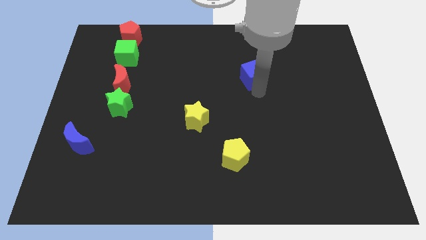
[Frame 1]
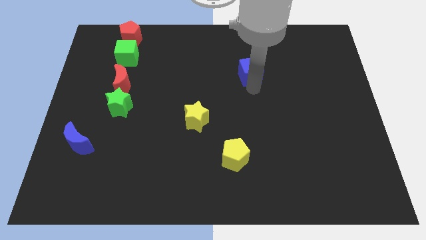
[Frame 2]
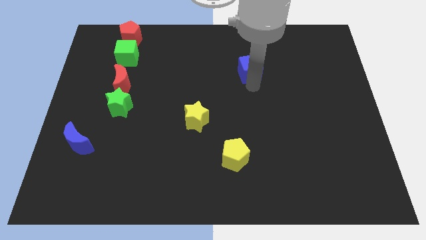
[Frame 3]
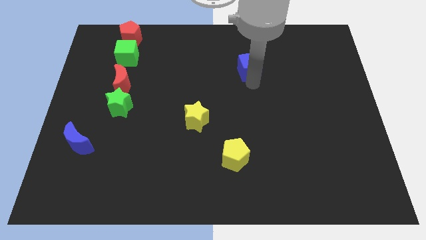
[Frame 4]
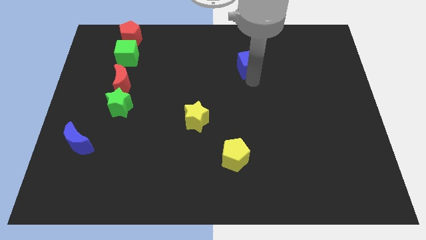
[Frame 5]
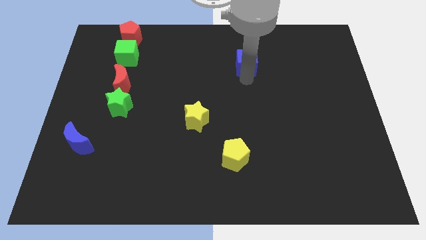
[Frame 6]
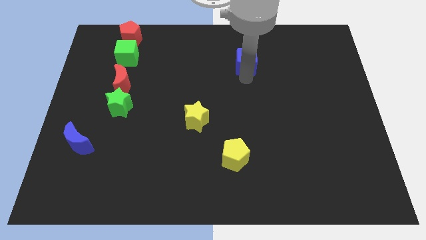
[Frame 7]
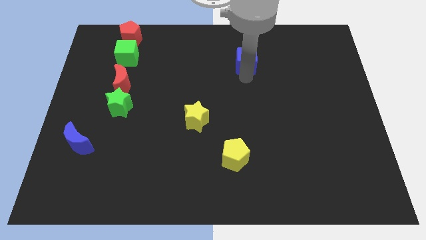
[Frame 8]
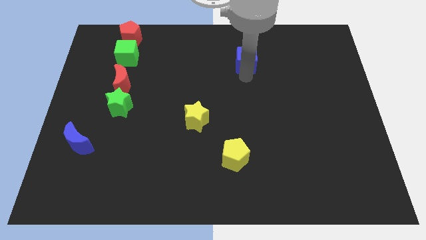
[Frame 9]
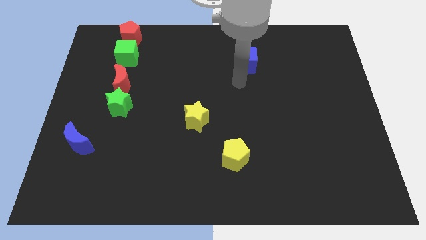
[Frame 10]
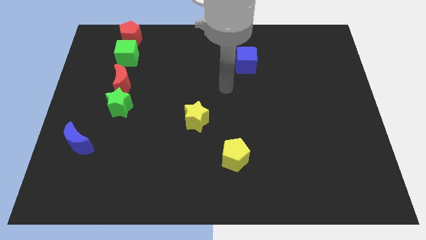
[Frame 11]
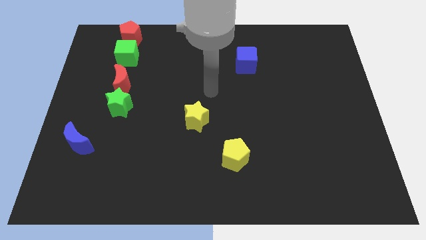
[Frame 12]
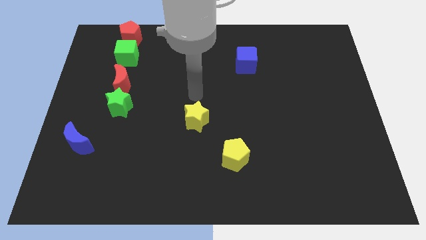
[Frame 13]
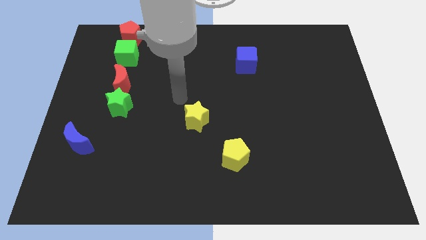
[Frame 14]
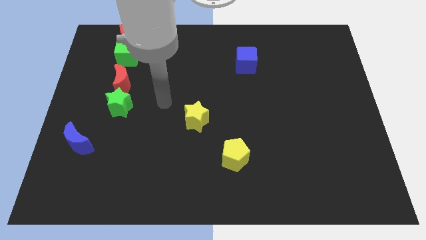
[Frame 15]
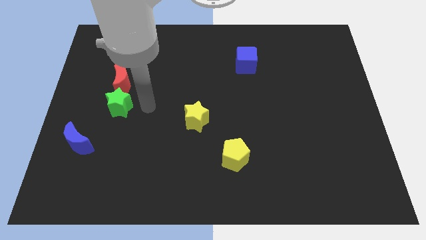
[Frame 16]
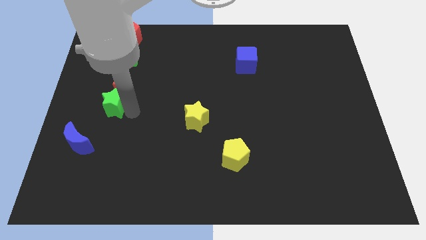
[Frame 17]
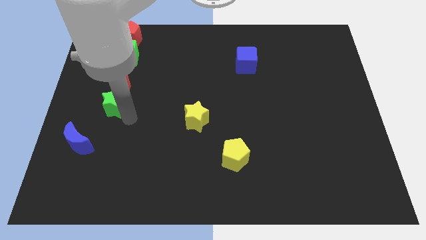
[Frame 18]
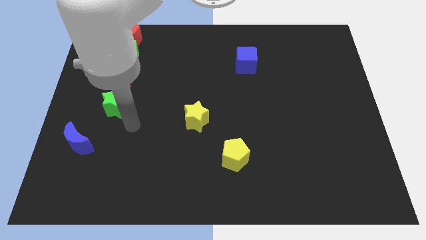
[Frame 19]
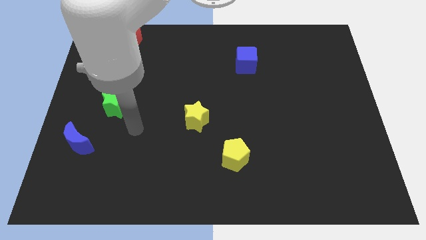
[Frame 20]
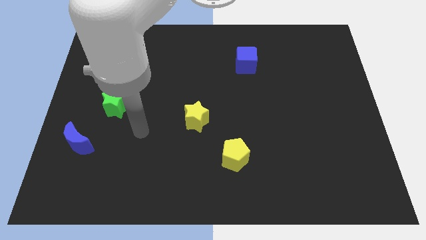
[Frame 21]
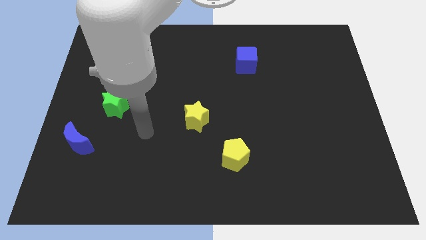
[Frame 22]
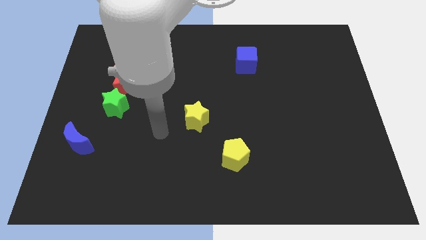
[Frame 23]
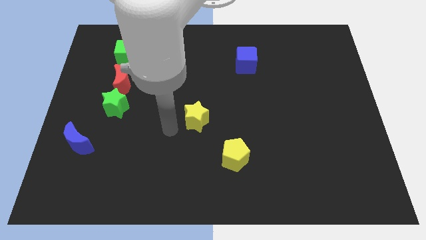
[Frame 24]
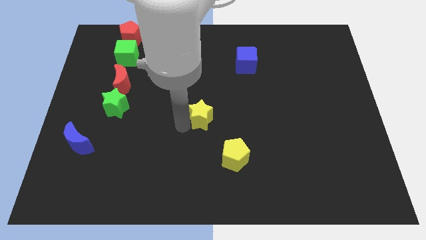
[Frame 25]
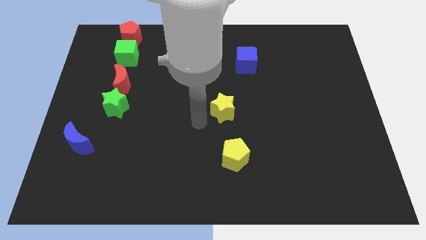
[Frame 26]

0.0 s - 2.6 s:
move your arm away form the blue cube

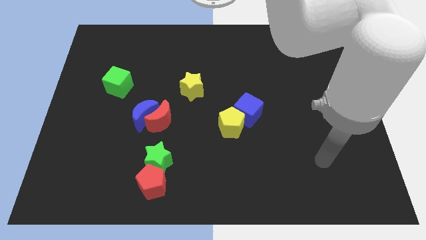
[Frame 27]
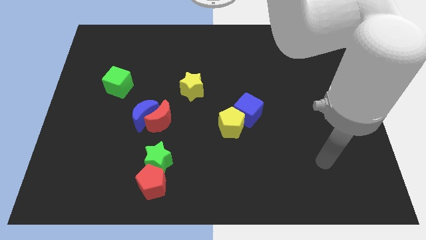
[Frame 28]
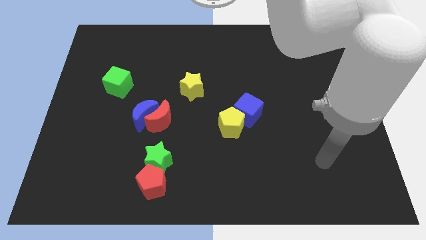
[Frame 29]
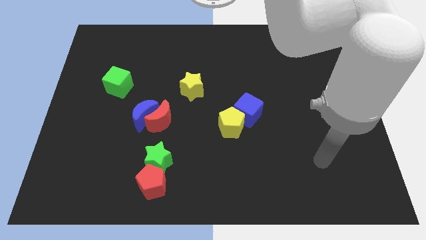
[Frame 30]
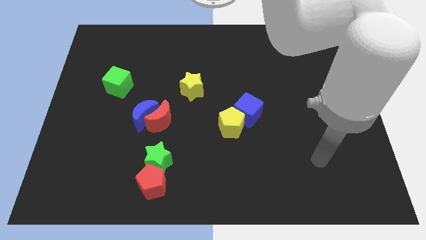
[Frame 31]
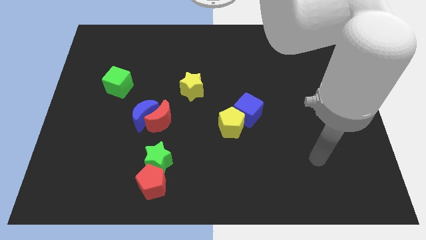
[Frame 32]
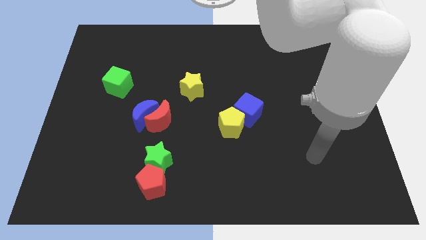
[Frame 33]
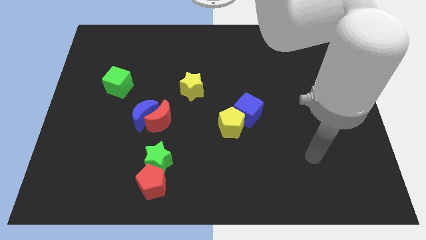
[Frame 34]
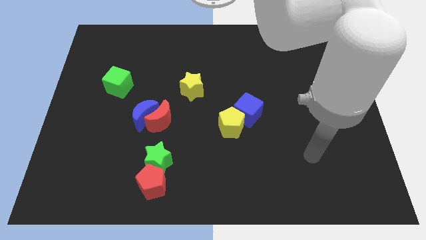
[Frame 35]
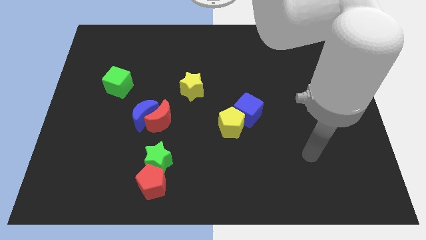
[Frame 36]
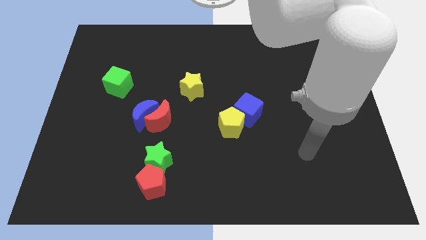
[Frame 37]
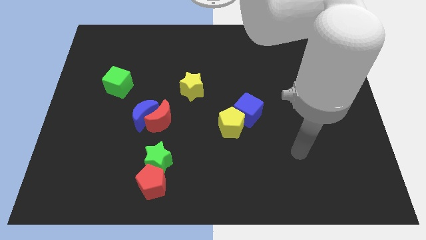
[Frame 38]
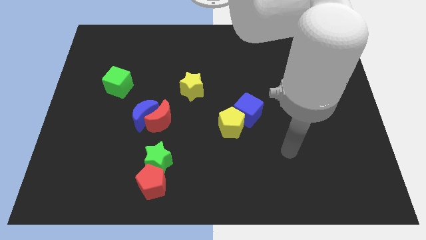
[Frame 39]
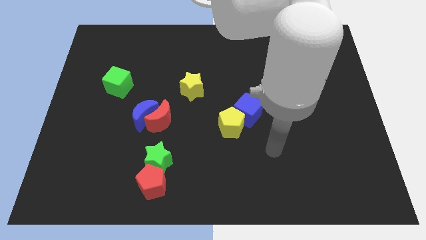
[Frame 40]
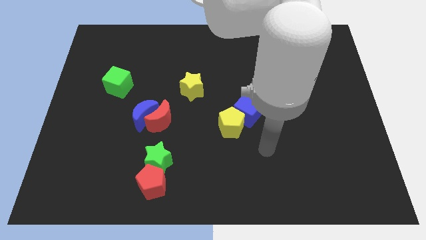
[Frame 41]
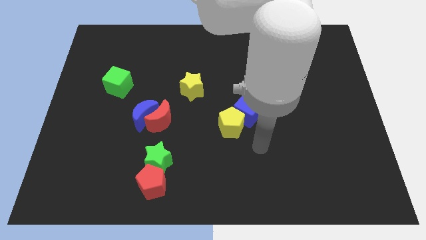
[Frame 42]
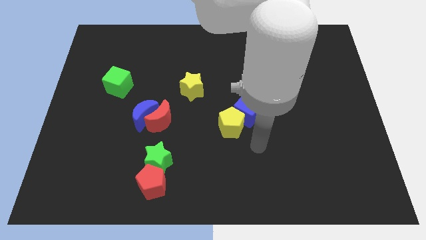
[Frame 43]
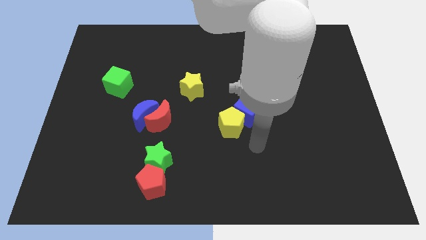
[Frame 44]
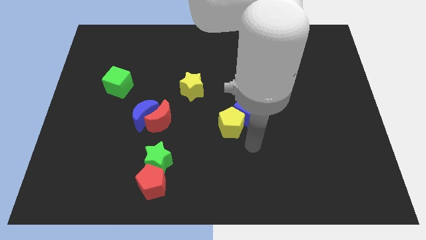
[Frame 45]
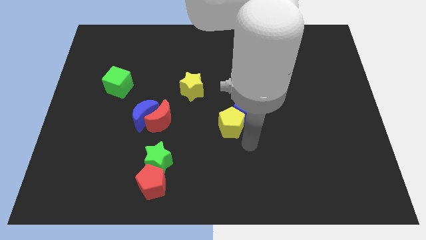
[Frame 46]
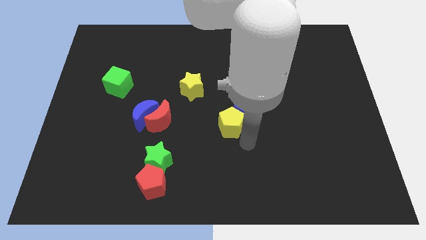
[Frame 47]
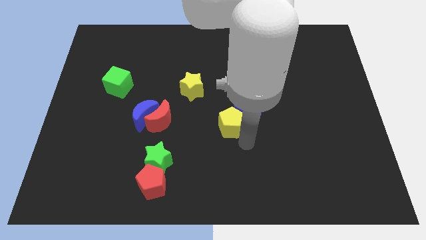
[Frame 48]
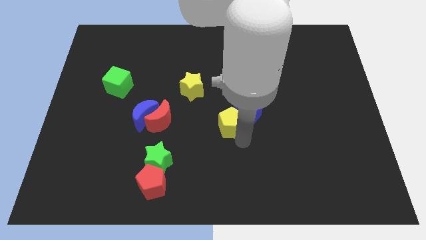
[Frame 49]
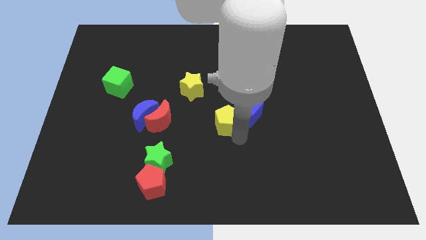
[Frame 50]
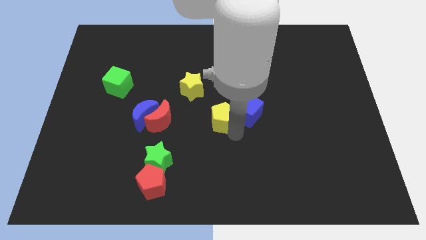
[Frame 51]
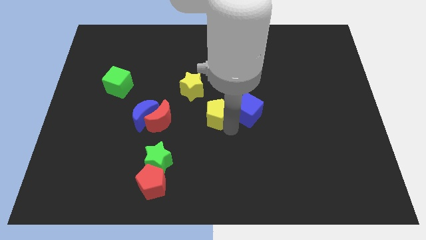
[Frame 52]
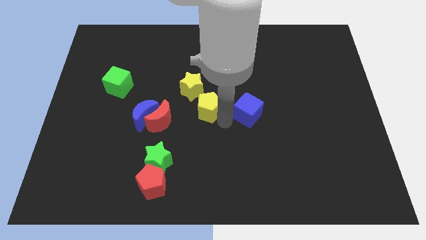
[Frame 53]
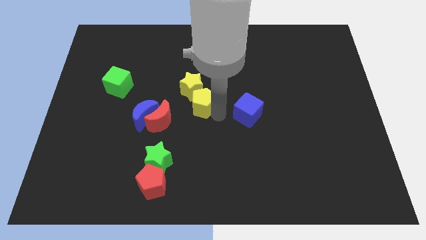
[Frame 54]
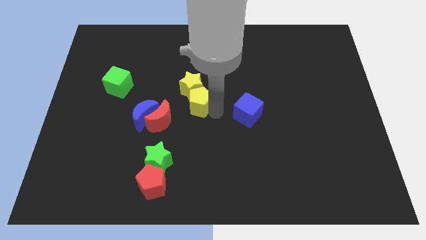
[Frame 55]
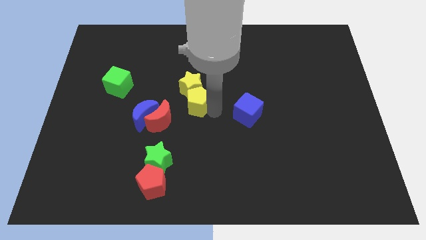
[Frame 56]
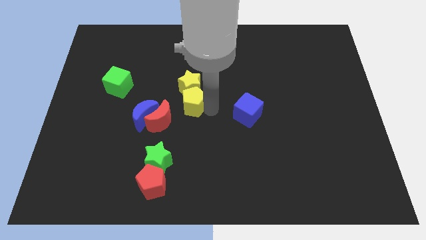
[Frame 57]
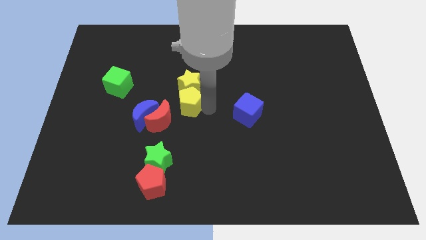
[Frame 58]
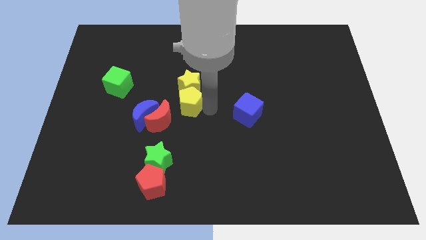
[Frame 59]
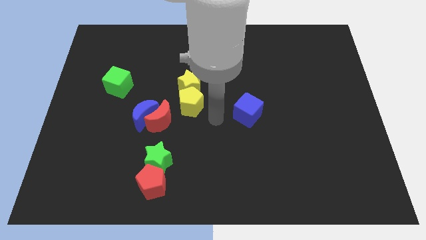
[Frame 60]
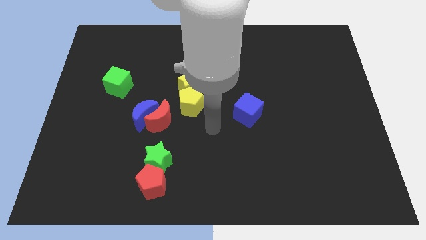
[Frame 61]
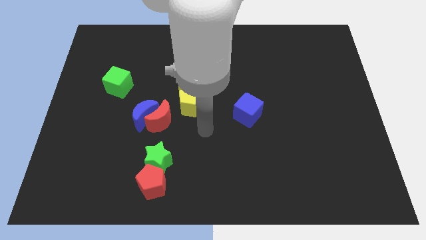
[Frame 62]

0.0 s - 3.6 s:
move the yellow pentagon down to the yellow star

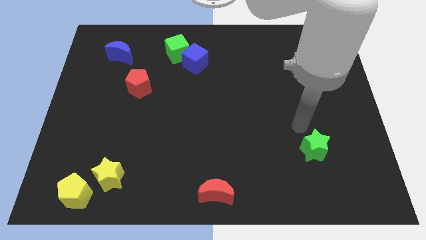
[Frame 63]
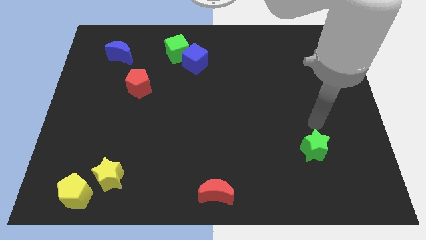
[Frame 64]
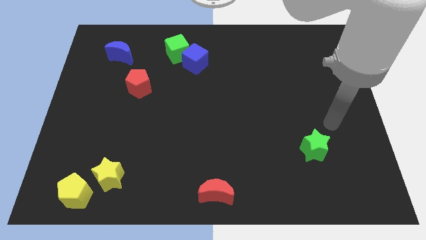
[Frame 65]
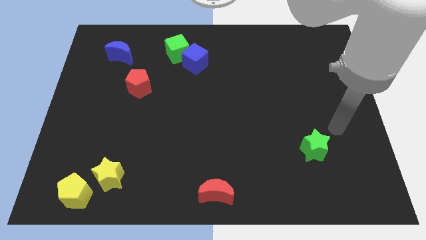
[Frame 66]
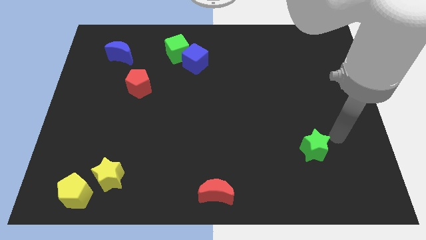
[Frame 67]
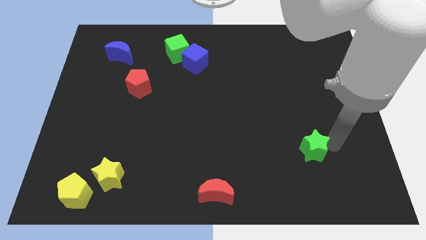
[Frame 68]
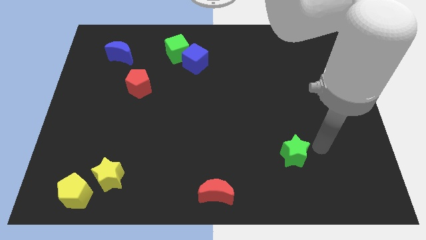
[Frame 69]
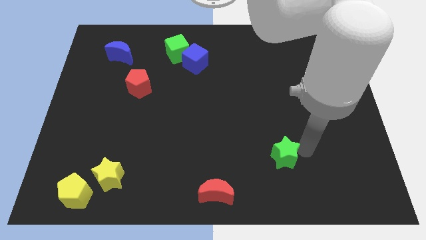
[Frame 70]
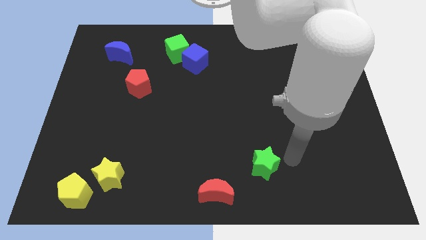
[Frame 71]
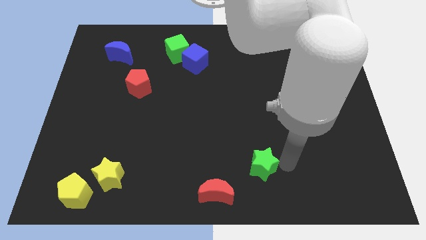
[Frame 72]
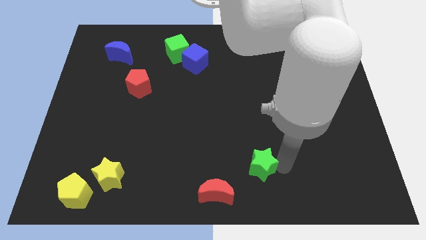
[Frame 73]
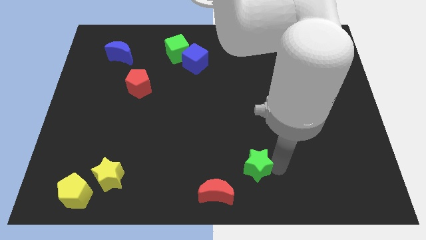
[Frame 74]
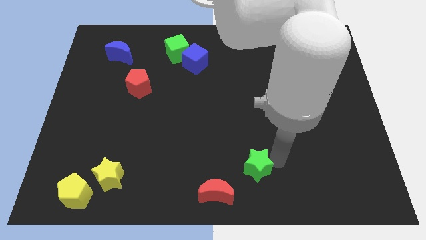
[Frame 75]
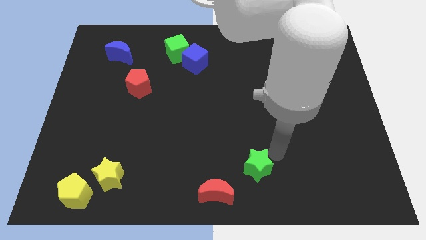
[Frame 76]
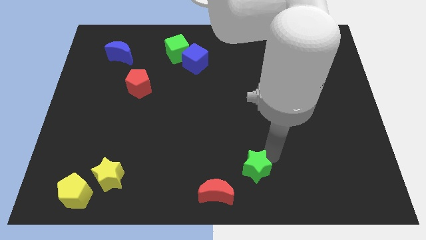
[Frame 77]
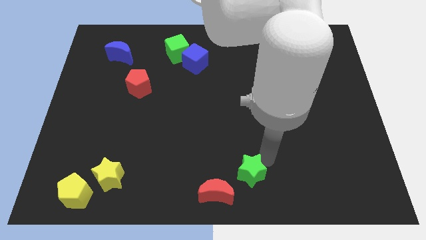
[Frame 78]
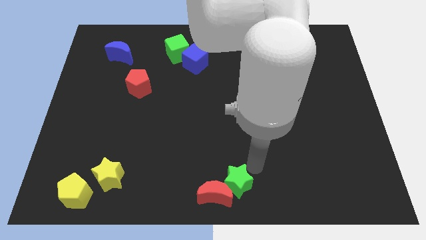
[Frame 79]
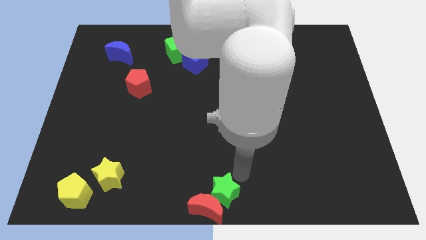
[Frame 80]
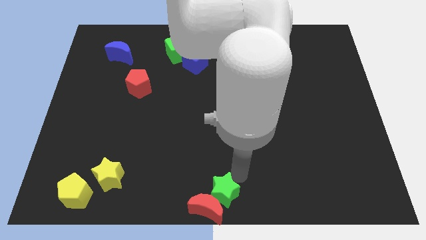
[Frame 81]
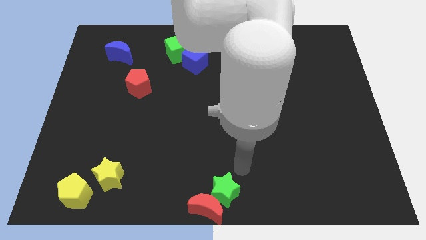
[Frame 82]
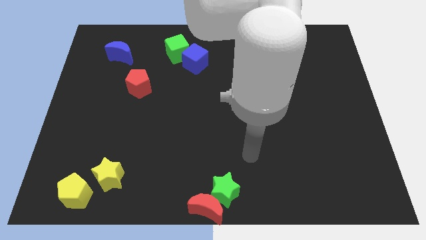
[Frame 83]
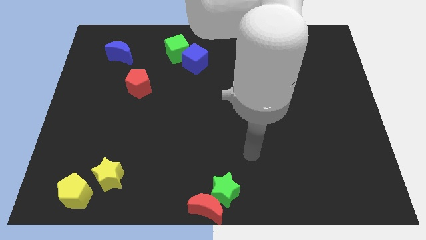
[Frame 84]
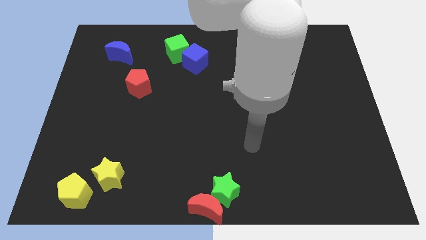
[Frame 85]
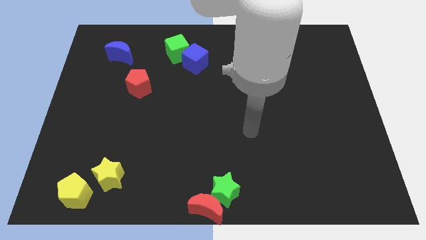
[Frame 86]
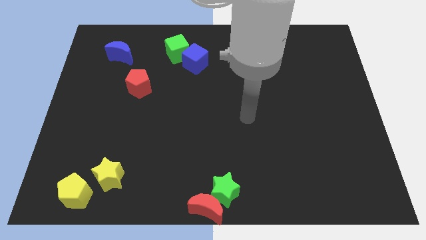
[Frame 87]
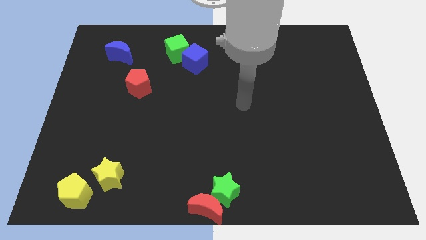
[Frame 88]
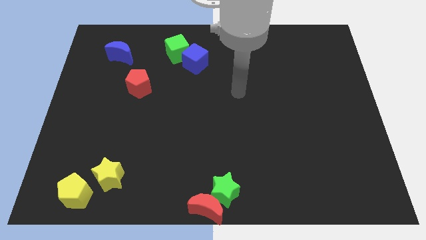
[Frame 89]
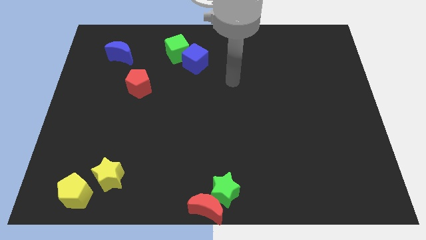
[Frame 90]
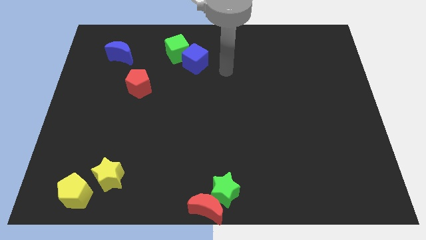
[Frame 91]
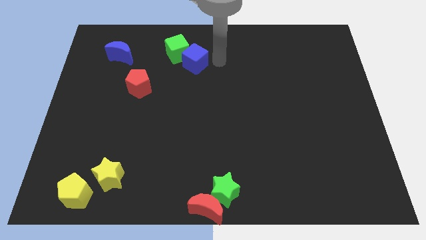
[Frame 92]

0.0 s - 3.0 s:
push green star into red moon
